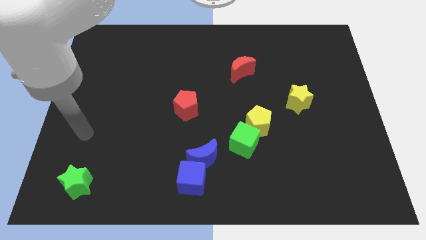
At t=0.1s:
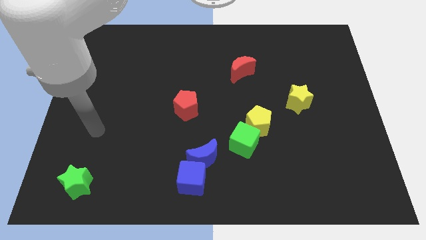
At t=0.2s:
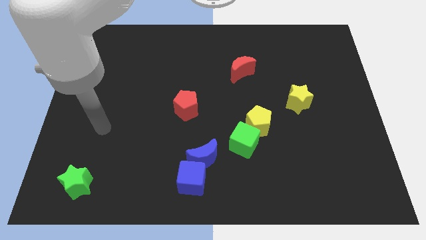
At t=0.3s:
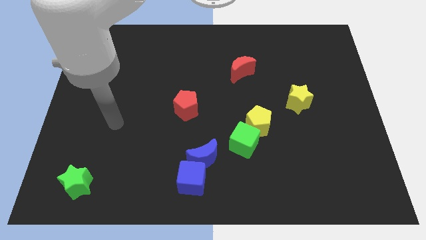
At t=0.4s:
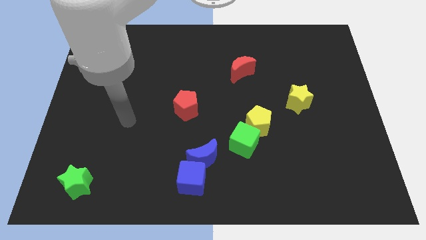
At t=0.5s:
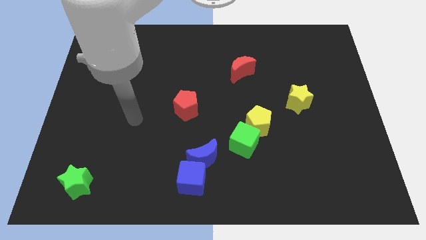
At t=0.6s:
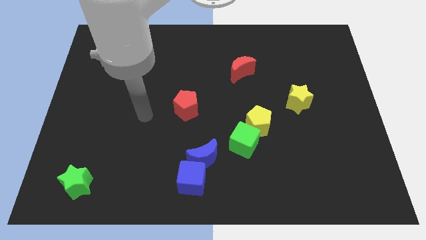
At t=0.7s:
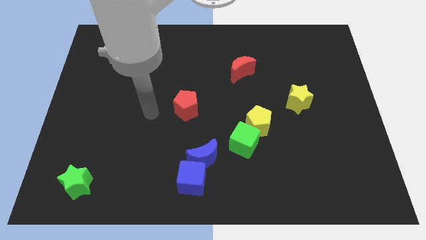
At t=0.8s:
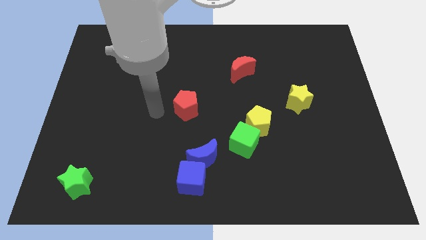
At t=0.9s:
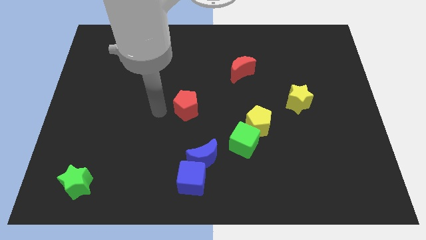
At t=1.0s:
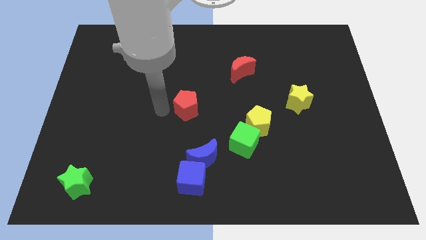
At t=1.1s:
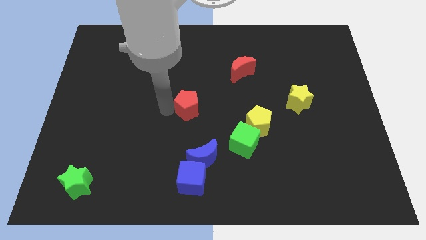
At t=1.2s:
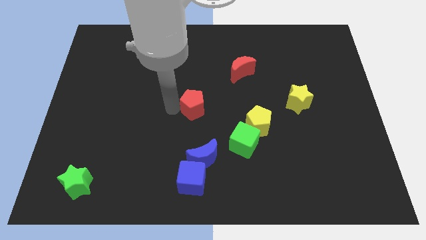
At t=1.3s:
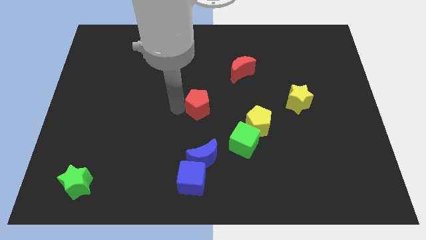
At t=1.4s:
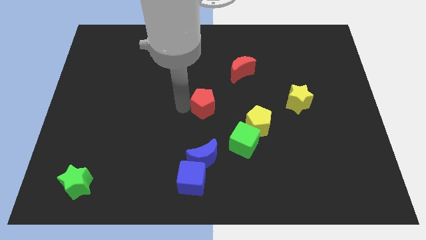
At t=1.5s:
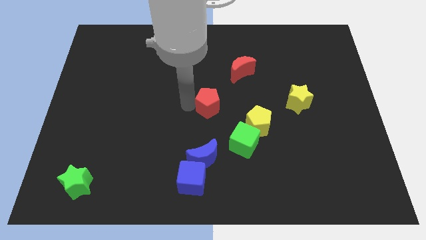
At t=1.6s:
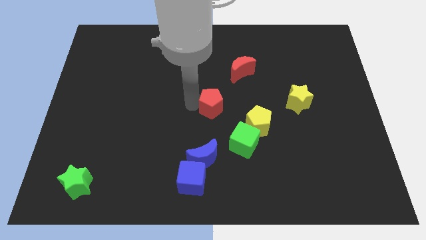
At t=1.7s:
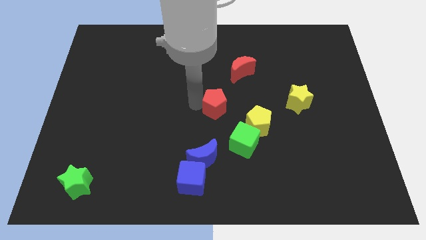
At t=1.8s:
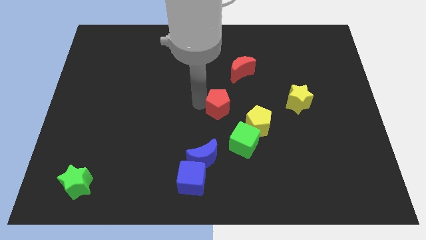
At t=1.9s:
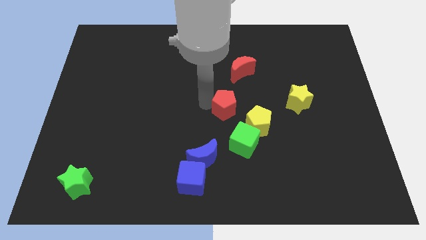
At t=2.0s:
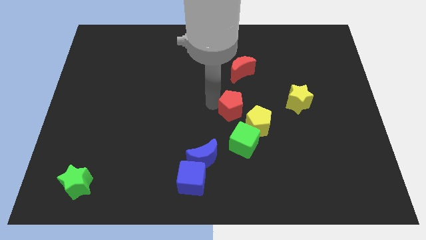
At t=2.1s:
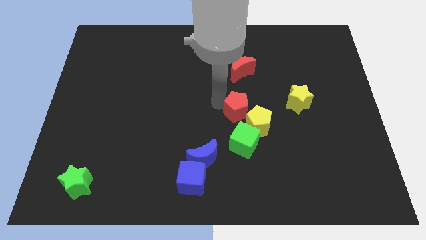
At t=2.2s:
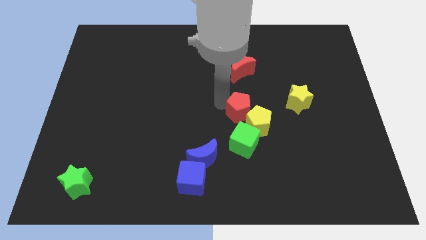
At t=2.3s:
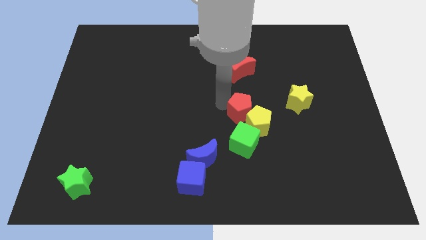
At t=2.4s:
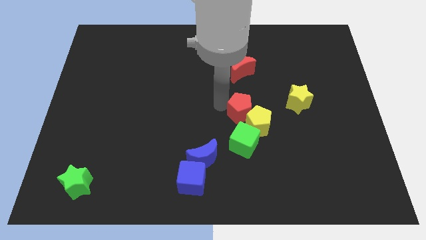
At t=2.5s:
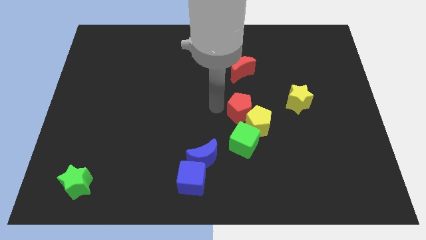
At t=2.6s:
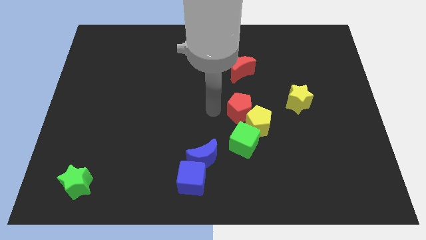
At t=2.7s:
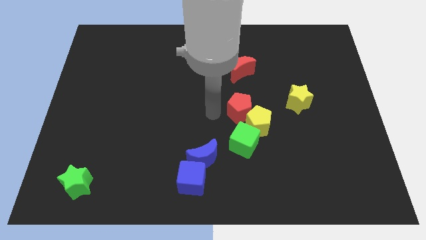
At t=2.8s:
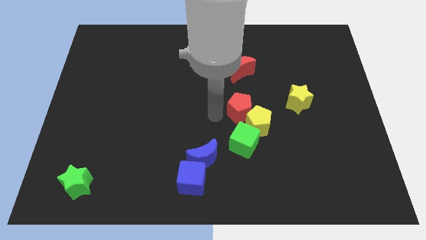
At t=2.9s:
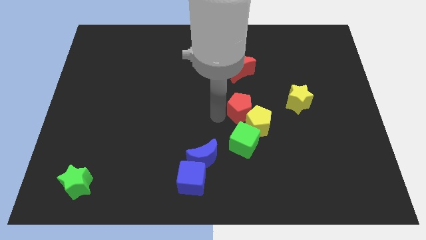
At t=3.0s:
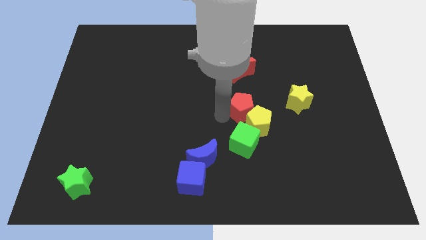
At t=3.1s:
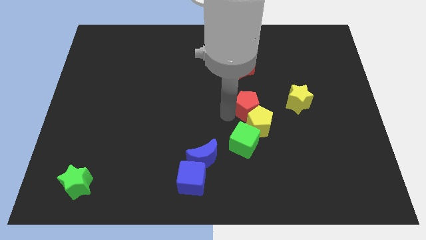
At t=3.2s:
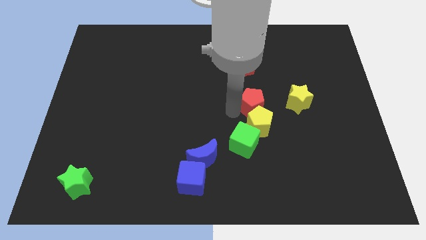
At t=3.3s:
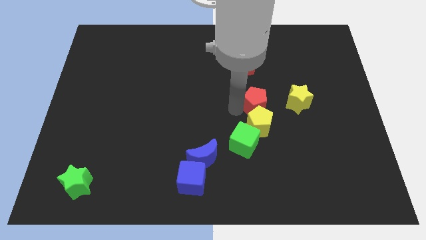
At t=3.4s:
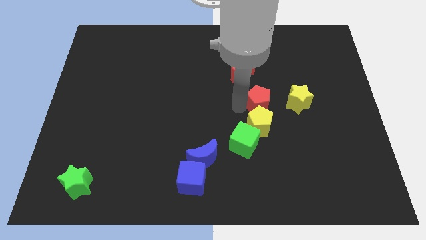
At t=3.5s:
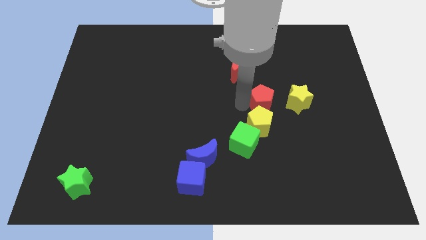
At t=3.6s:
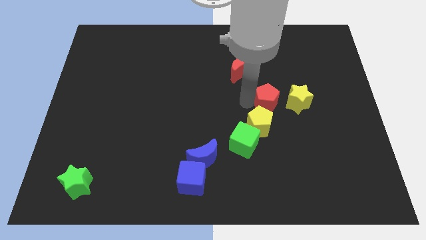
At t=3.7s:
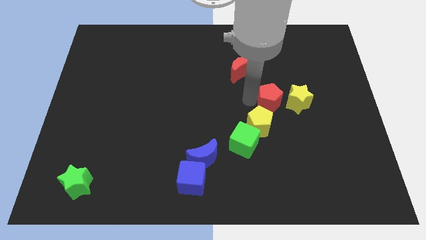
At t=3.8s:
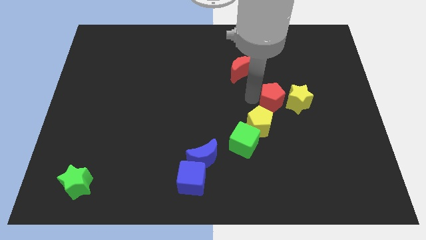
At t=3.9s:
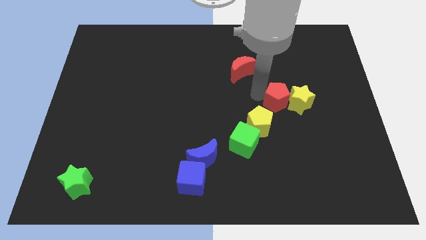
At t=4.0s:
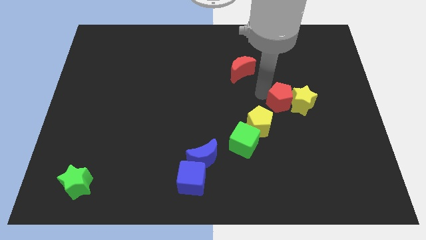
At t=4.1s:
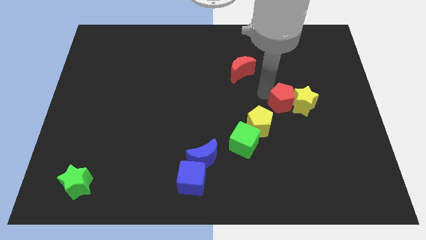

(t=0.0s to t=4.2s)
put the red pentagon towards the yellow star

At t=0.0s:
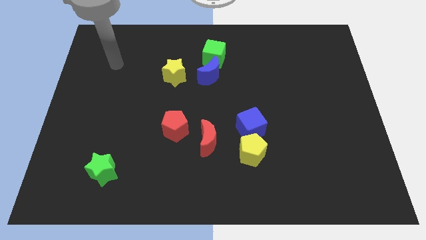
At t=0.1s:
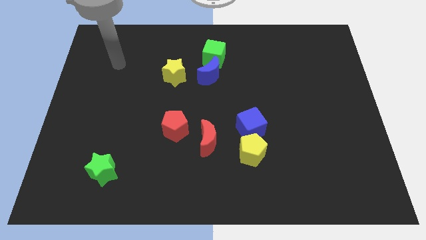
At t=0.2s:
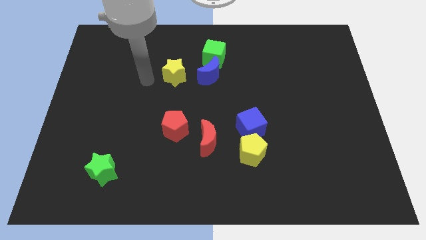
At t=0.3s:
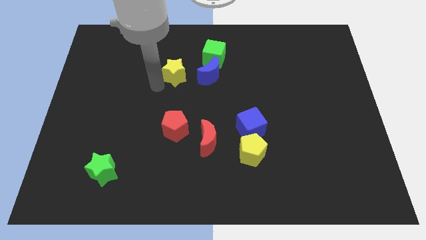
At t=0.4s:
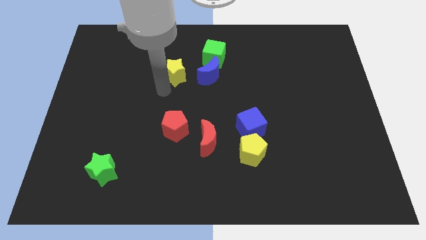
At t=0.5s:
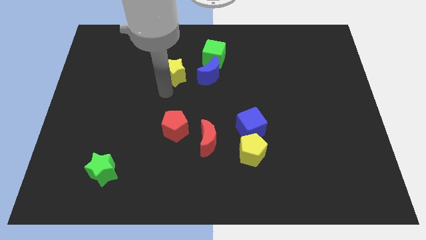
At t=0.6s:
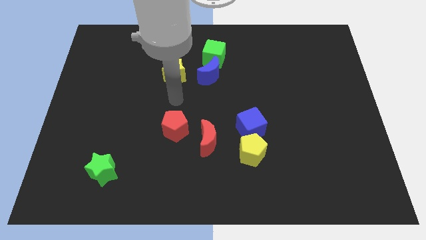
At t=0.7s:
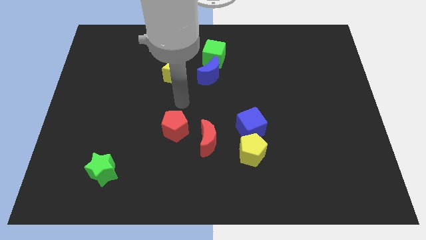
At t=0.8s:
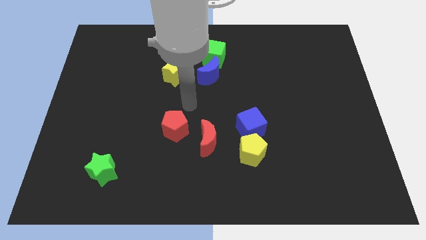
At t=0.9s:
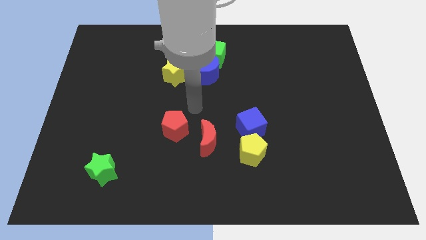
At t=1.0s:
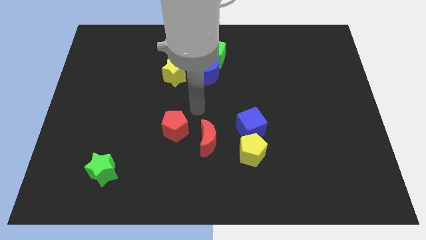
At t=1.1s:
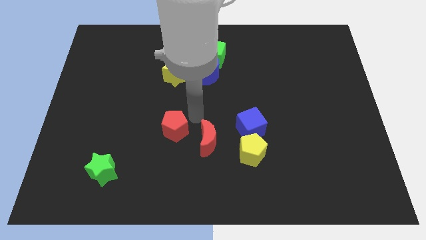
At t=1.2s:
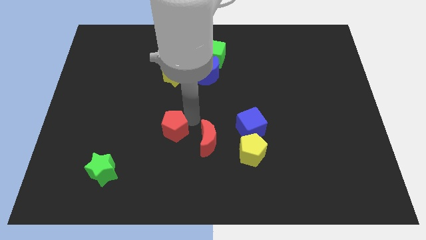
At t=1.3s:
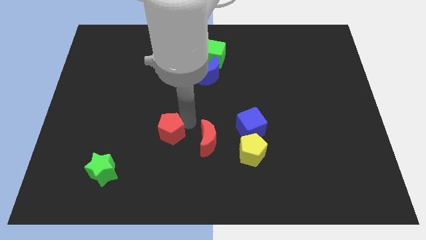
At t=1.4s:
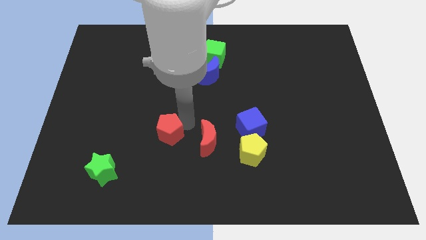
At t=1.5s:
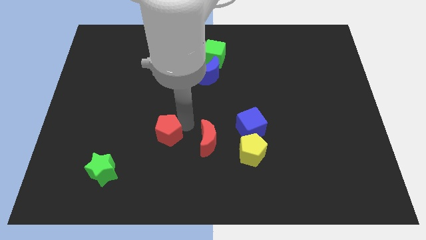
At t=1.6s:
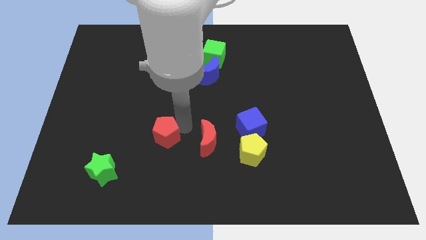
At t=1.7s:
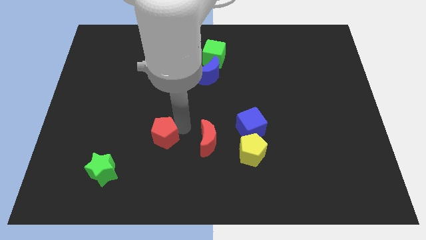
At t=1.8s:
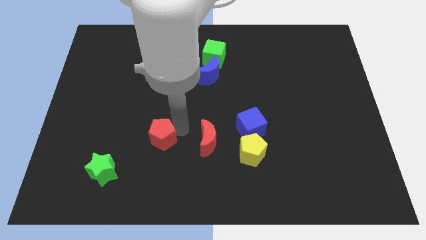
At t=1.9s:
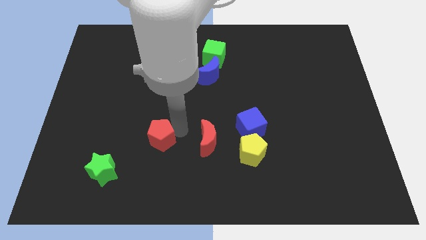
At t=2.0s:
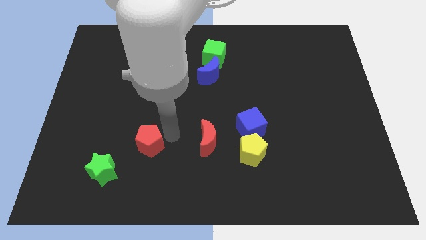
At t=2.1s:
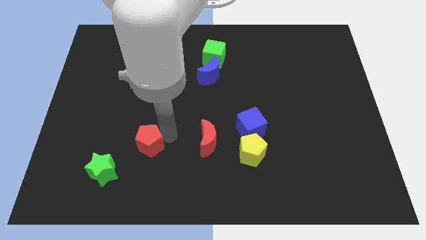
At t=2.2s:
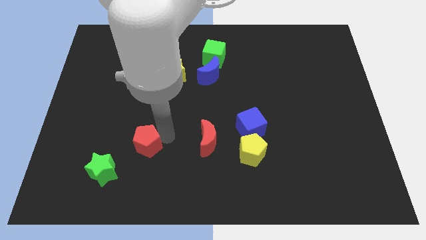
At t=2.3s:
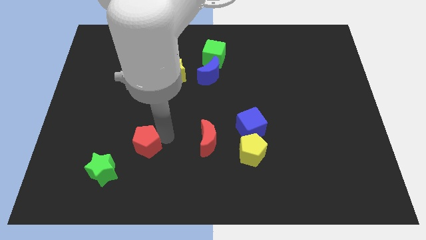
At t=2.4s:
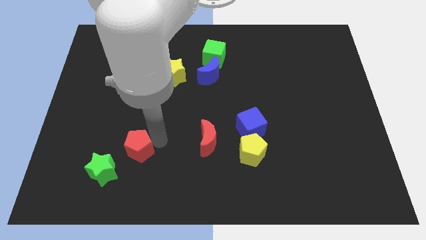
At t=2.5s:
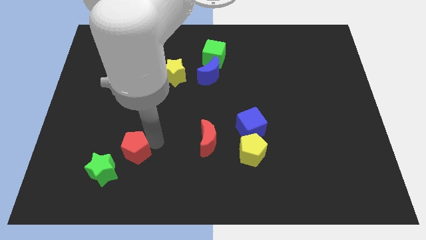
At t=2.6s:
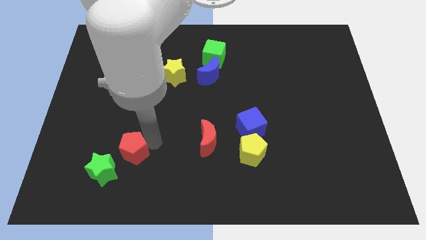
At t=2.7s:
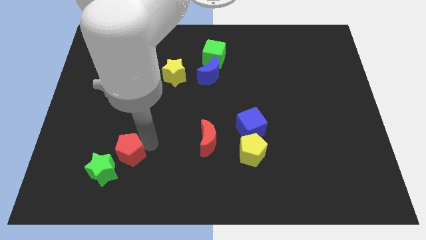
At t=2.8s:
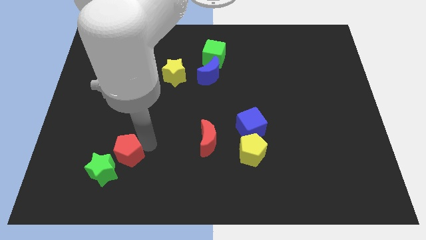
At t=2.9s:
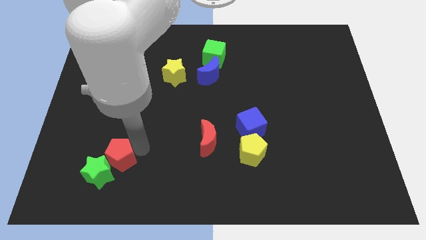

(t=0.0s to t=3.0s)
put the red pentagon to the green star

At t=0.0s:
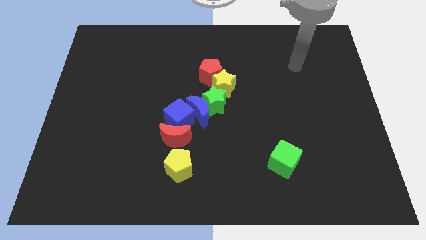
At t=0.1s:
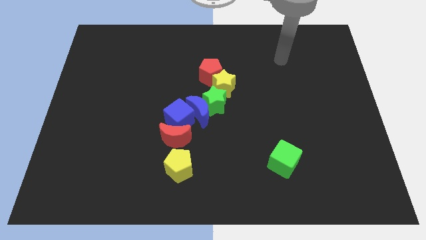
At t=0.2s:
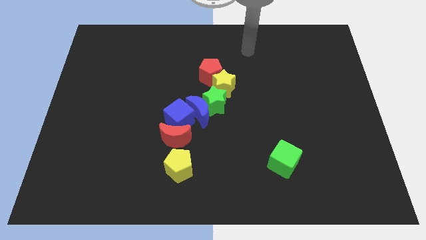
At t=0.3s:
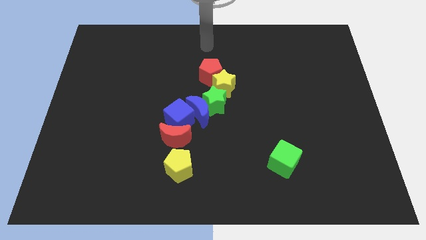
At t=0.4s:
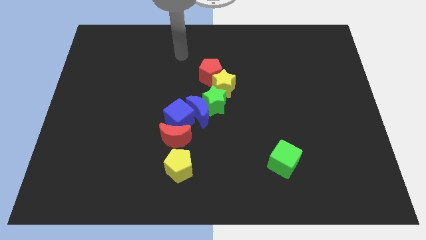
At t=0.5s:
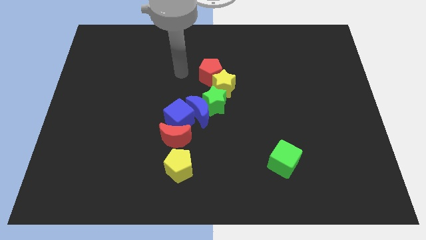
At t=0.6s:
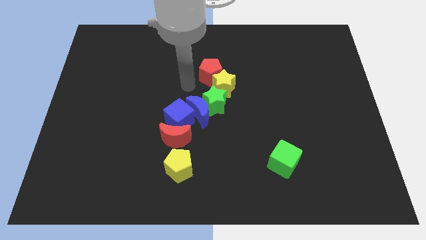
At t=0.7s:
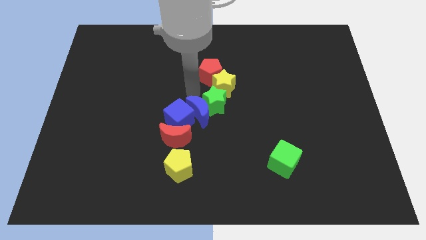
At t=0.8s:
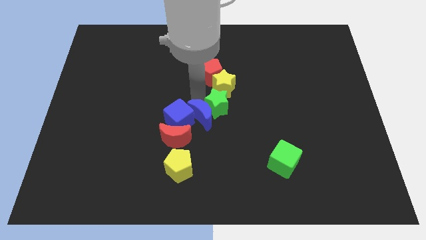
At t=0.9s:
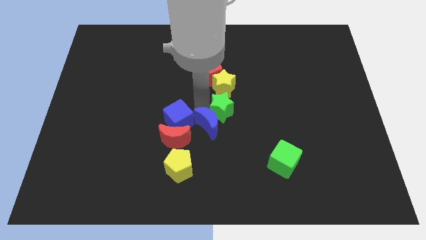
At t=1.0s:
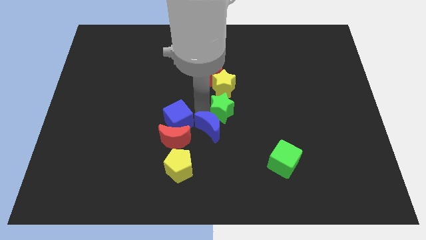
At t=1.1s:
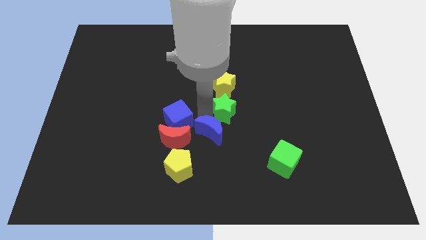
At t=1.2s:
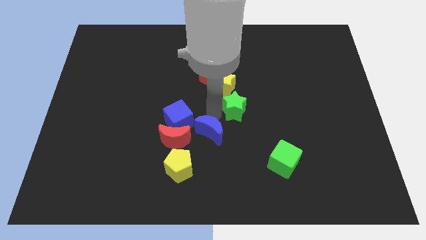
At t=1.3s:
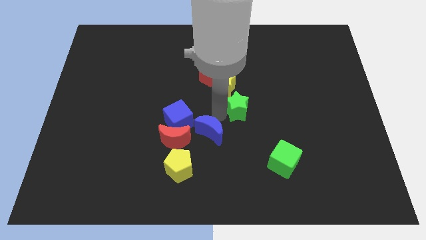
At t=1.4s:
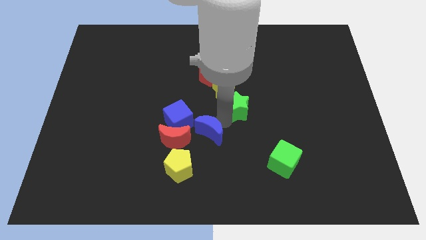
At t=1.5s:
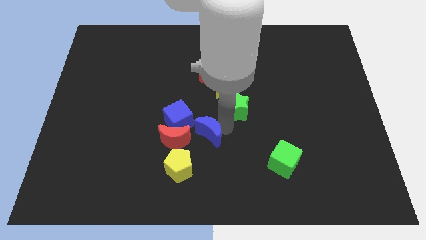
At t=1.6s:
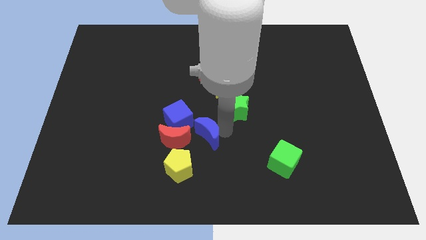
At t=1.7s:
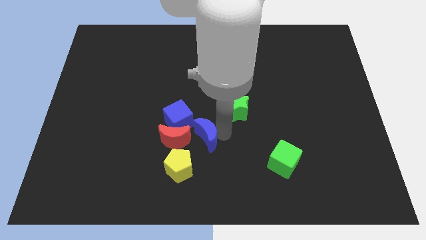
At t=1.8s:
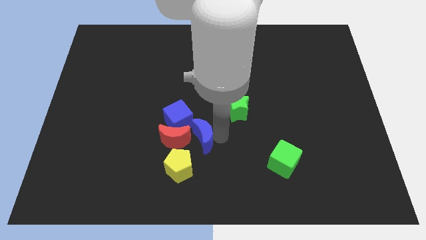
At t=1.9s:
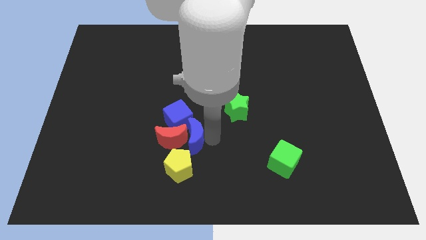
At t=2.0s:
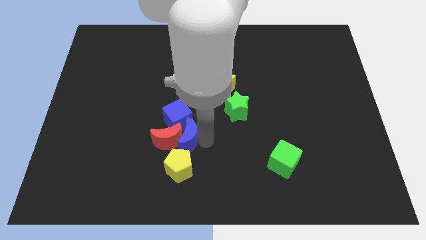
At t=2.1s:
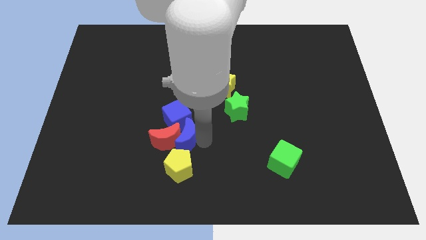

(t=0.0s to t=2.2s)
move the blue moon next to the red moon
